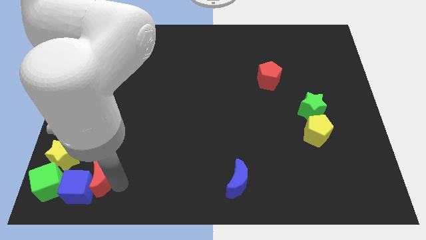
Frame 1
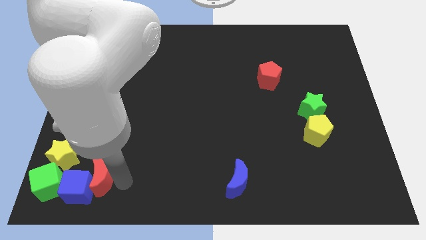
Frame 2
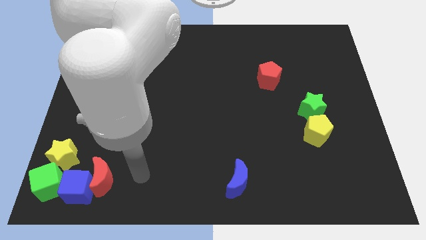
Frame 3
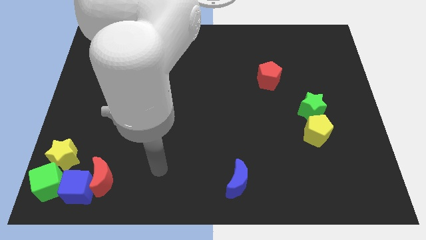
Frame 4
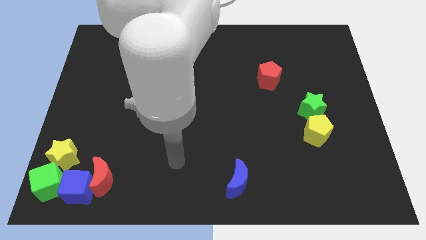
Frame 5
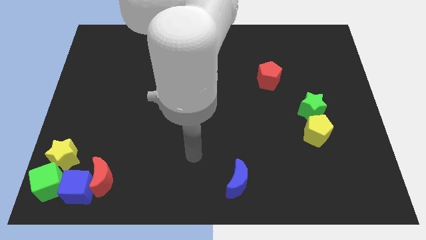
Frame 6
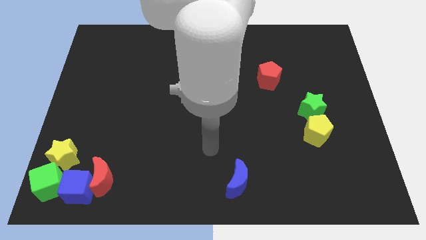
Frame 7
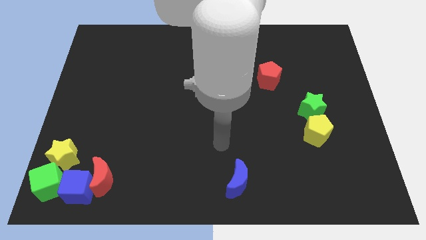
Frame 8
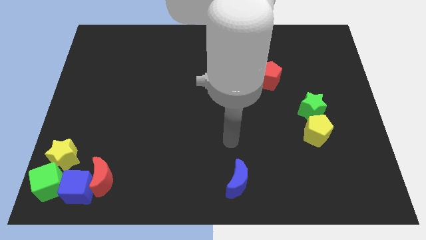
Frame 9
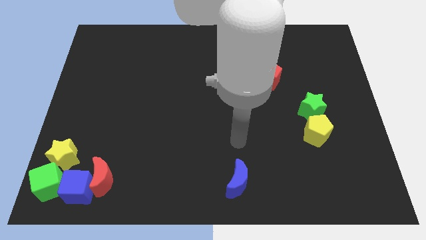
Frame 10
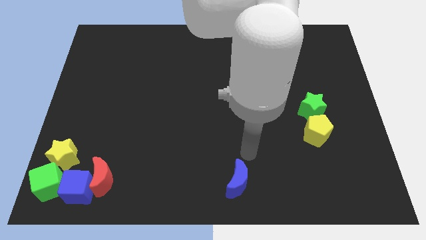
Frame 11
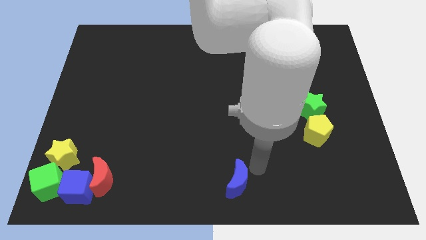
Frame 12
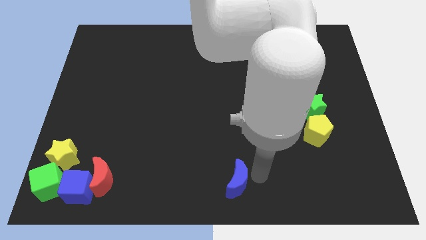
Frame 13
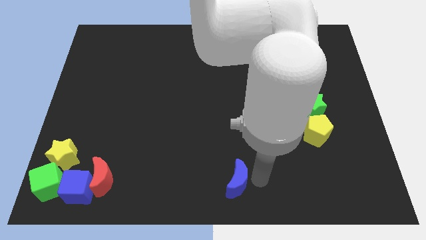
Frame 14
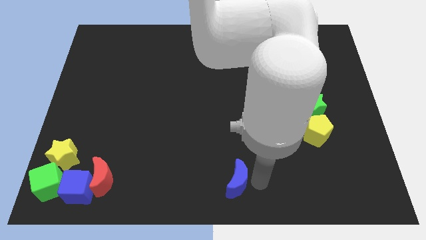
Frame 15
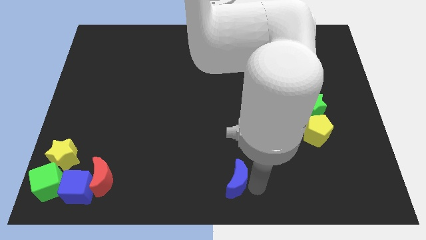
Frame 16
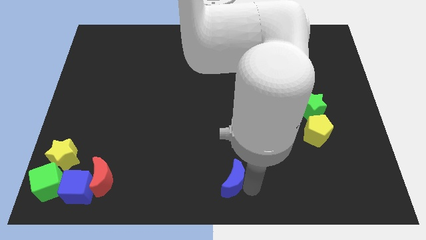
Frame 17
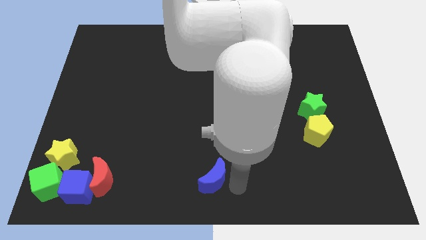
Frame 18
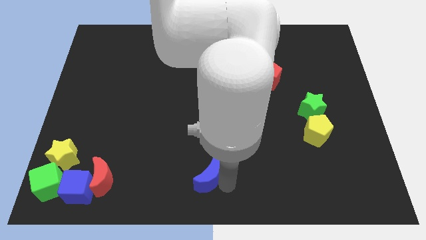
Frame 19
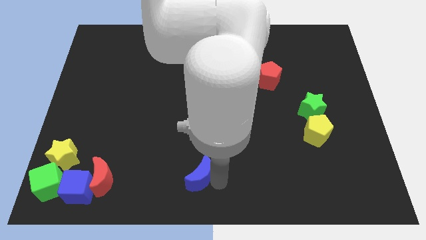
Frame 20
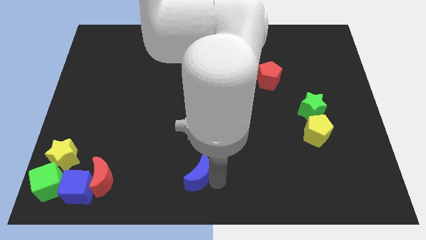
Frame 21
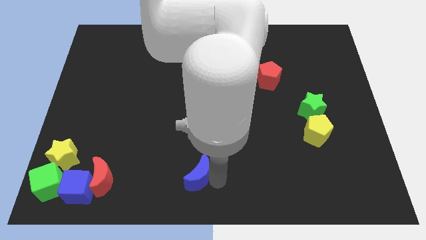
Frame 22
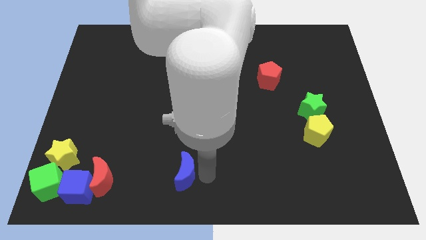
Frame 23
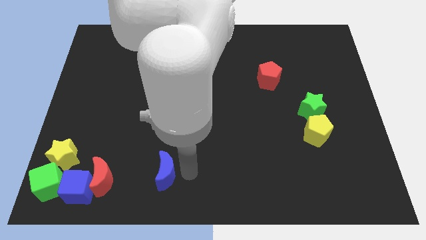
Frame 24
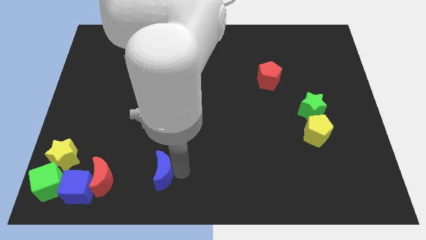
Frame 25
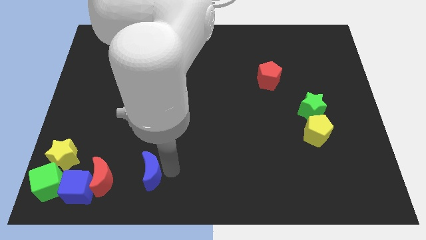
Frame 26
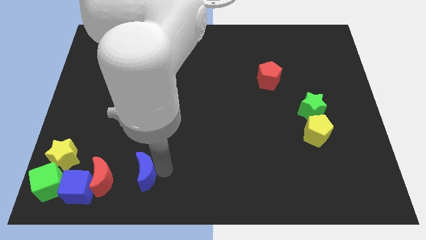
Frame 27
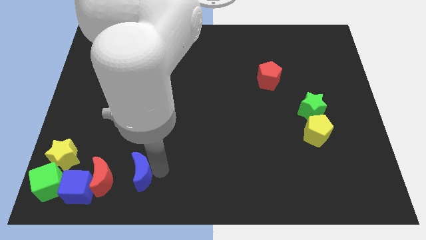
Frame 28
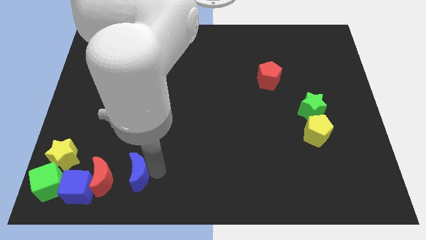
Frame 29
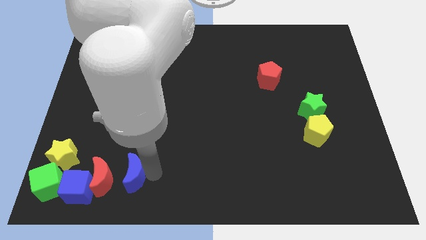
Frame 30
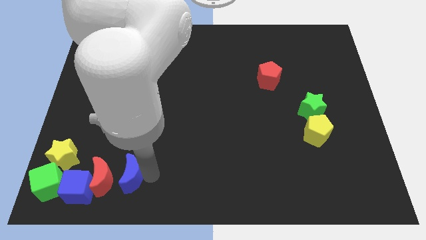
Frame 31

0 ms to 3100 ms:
place the blue moon right to the red moon

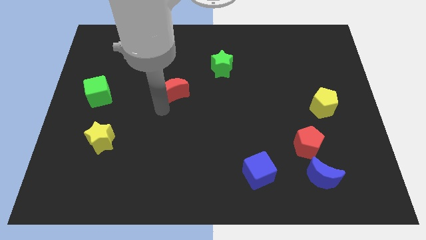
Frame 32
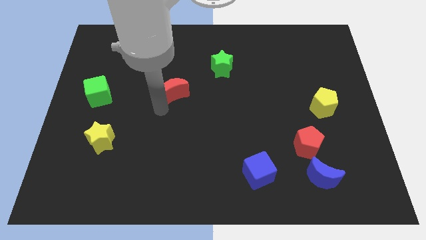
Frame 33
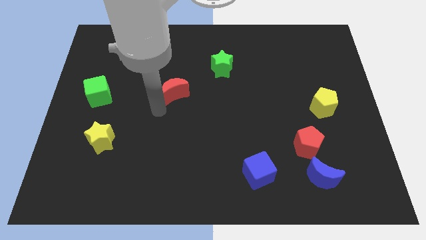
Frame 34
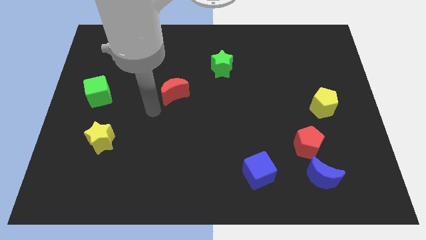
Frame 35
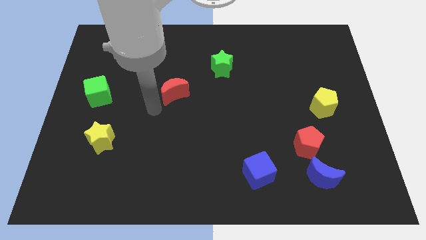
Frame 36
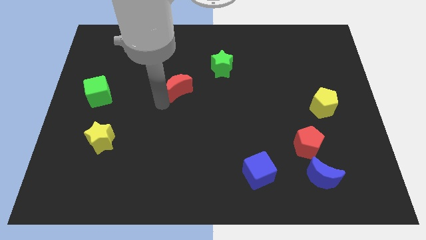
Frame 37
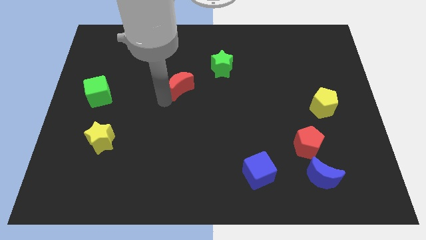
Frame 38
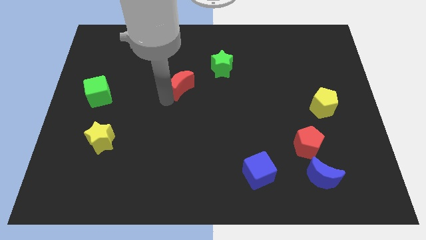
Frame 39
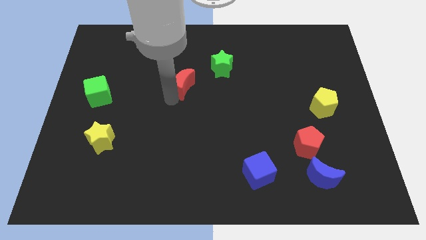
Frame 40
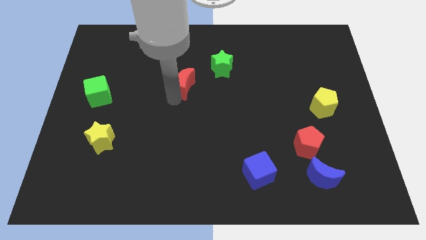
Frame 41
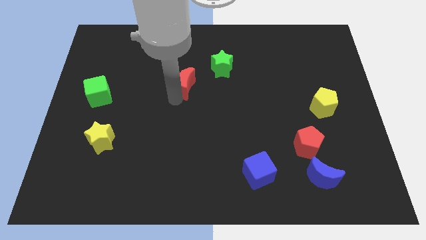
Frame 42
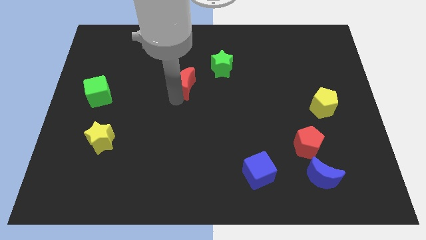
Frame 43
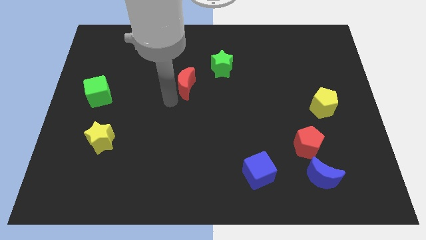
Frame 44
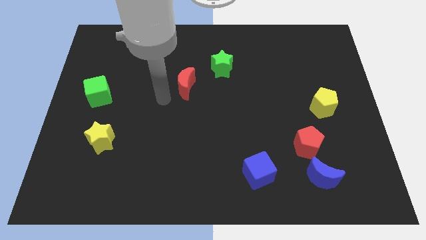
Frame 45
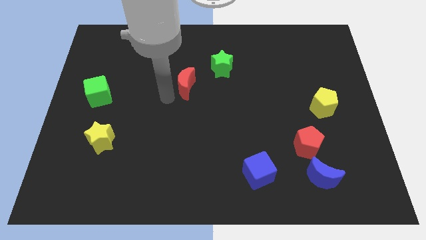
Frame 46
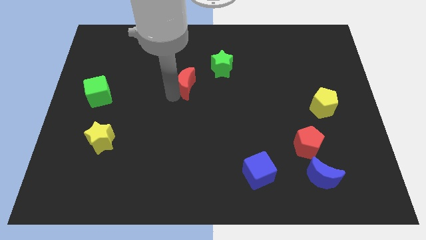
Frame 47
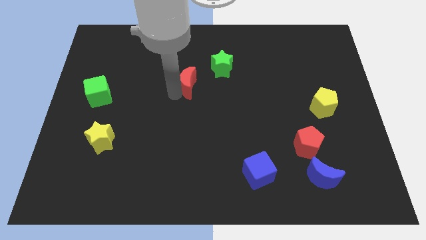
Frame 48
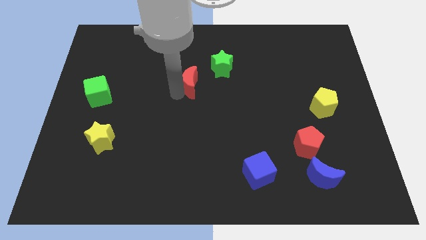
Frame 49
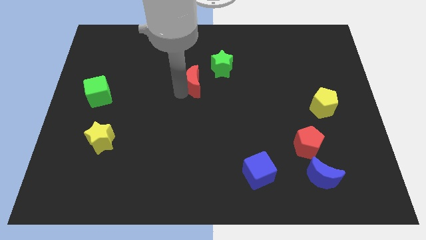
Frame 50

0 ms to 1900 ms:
push the red crescent towards the green star

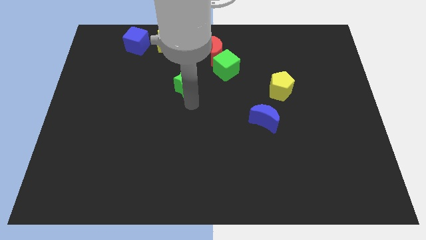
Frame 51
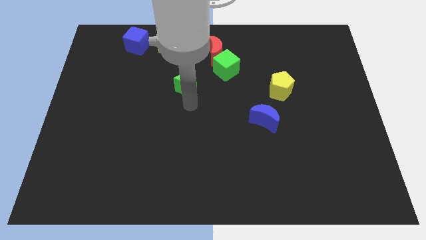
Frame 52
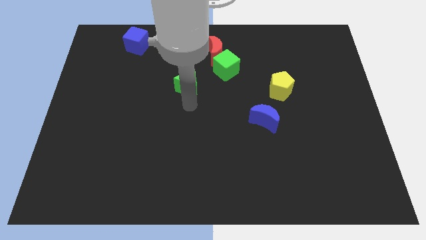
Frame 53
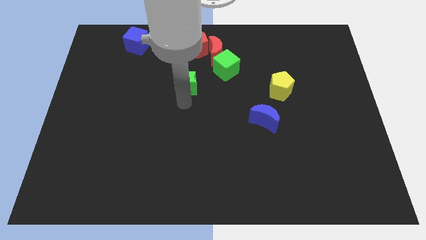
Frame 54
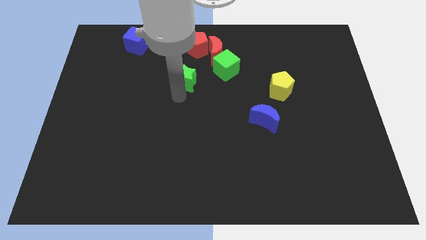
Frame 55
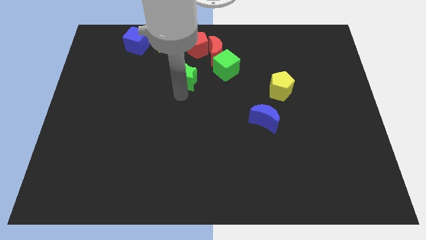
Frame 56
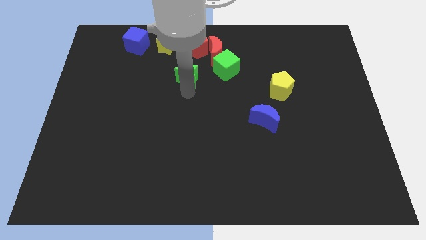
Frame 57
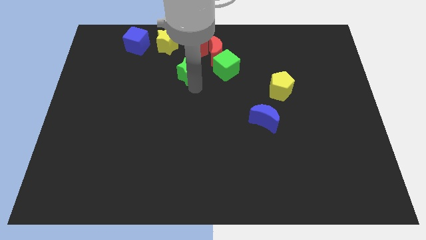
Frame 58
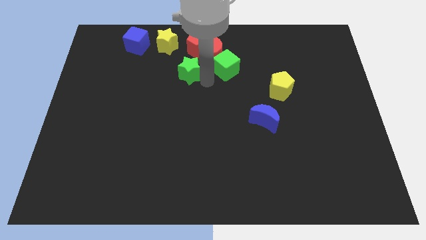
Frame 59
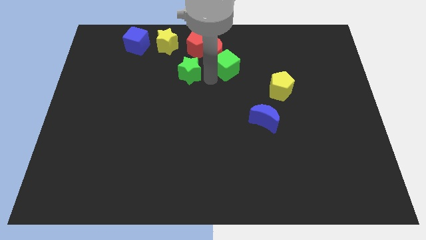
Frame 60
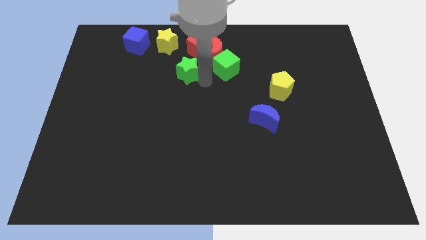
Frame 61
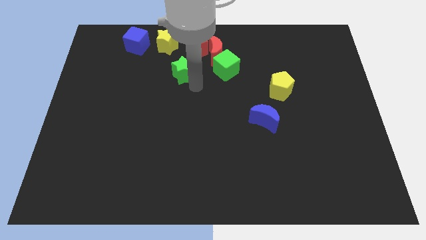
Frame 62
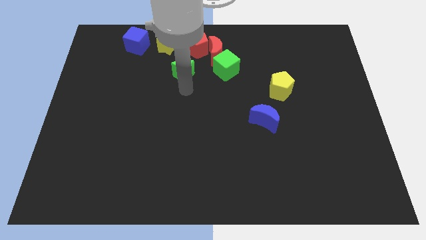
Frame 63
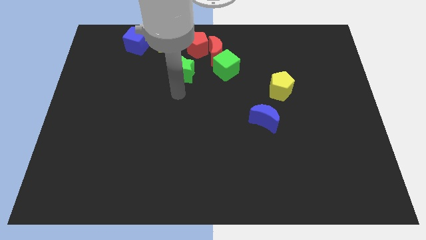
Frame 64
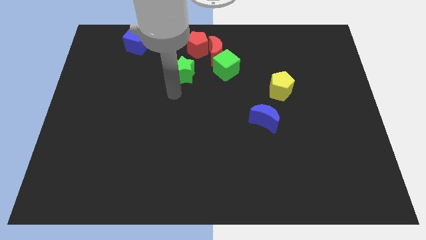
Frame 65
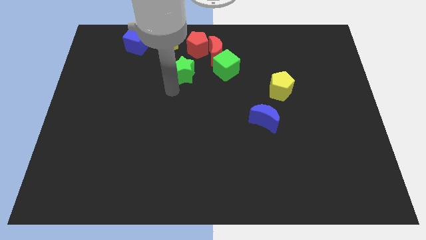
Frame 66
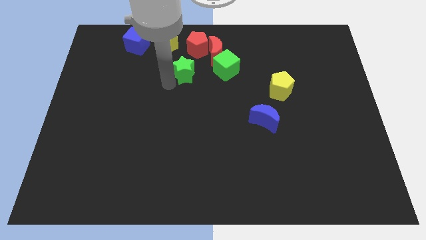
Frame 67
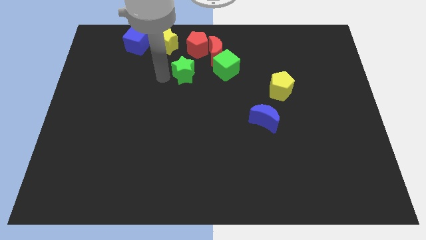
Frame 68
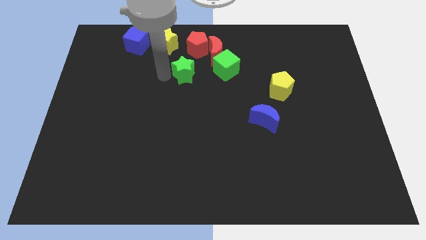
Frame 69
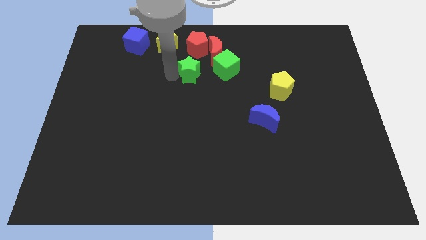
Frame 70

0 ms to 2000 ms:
move the green star below the red pentagon

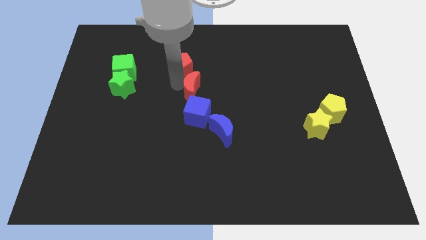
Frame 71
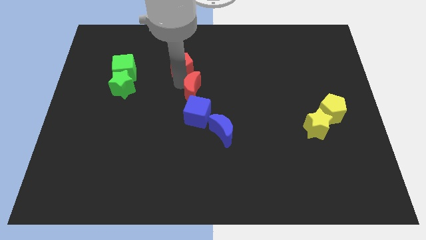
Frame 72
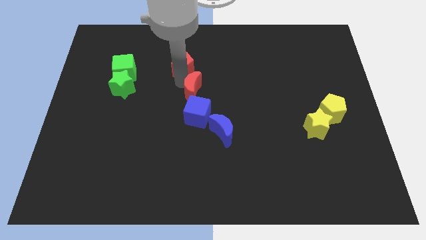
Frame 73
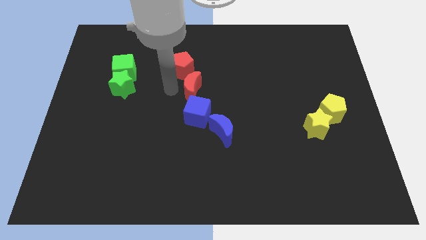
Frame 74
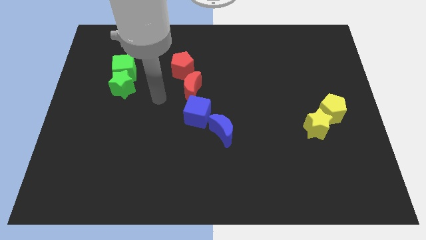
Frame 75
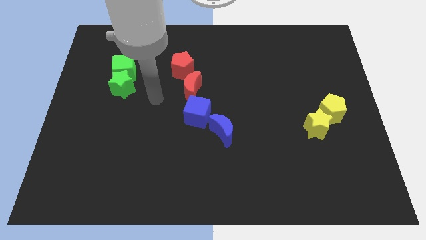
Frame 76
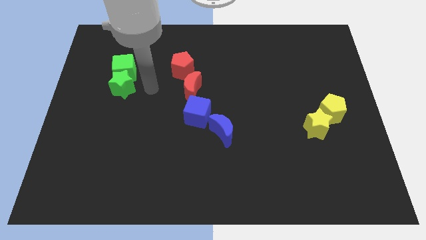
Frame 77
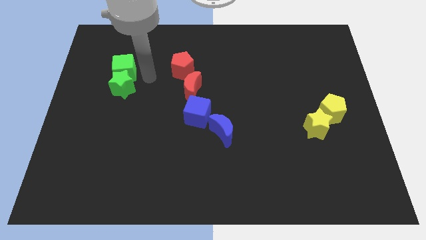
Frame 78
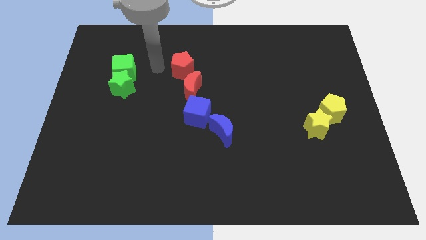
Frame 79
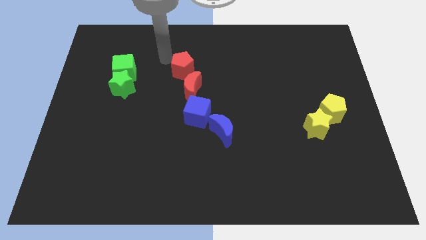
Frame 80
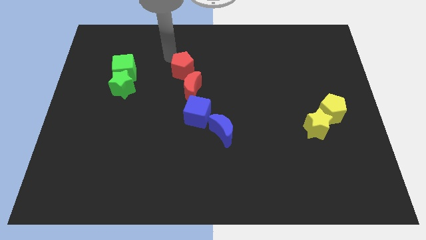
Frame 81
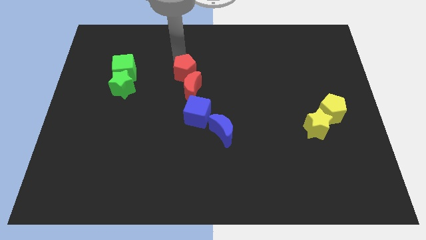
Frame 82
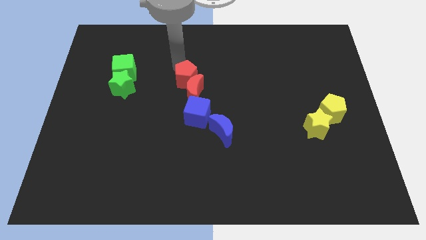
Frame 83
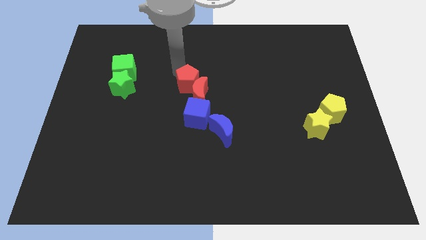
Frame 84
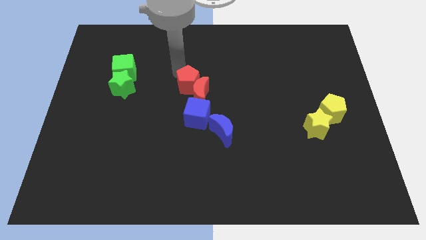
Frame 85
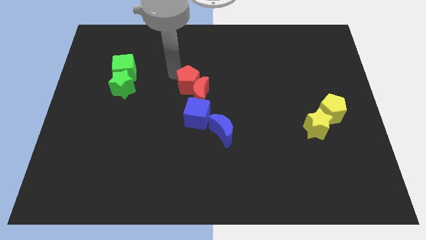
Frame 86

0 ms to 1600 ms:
push red pentagon downwards

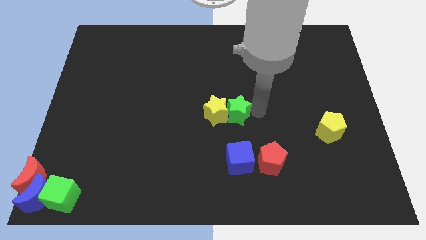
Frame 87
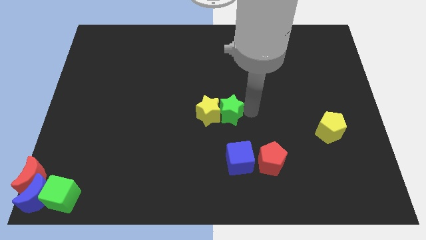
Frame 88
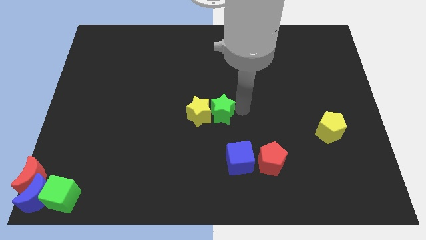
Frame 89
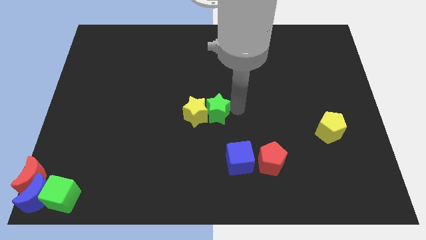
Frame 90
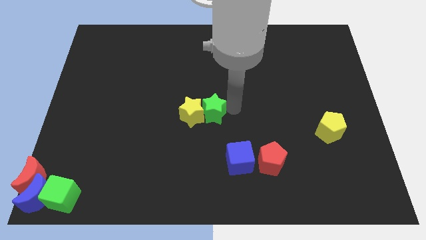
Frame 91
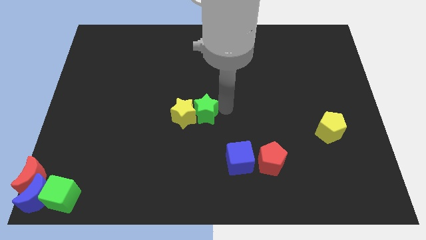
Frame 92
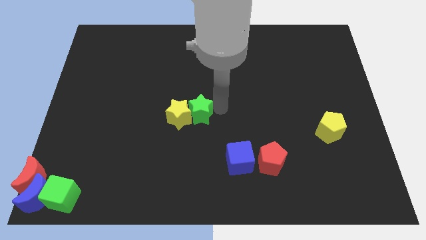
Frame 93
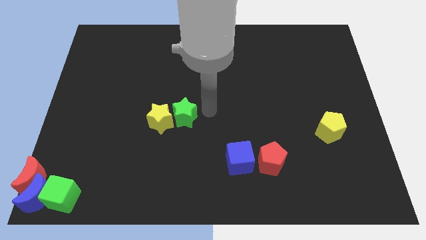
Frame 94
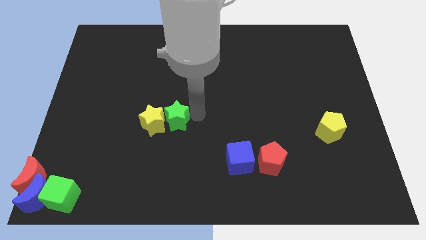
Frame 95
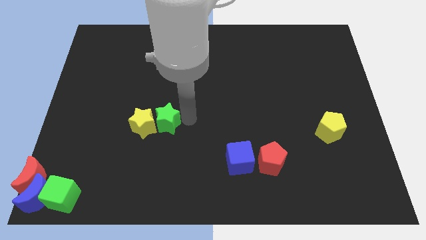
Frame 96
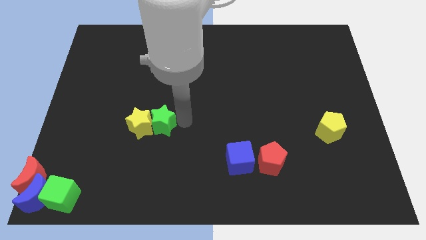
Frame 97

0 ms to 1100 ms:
push yellow star with green star
